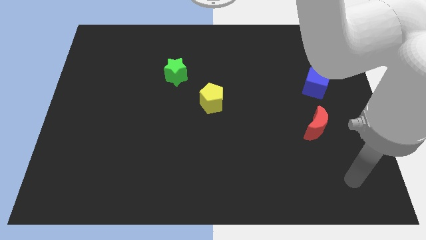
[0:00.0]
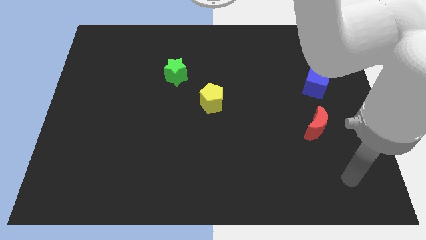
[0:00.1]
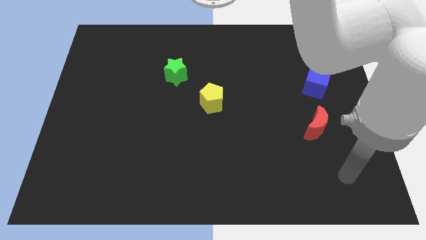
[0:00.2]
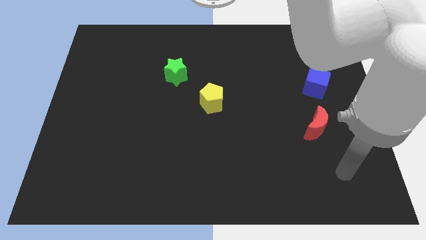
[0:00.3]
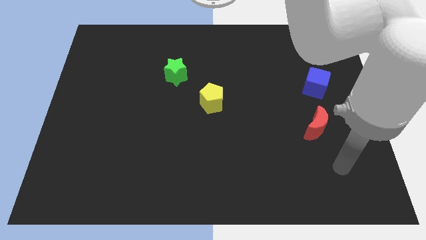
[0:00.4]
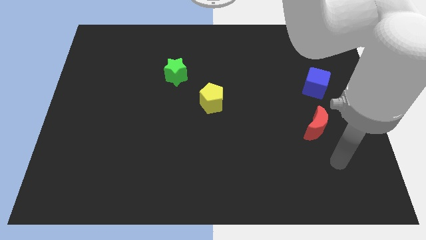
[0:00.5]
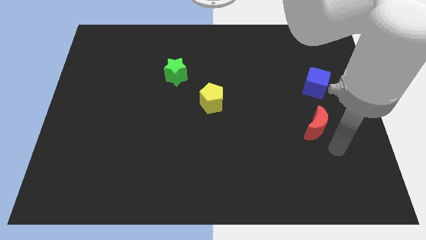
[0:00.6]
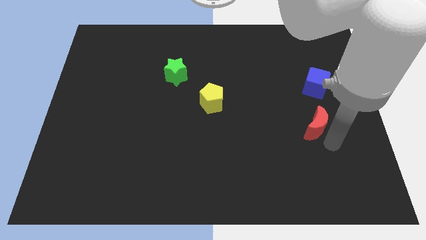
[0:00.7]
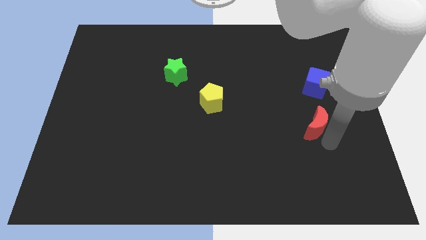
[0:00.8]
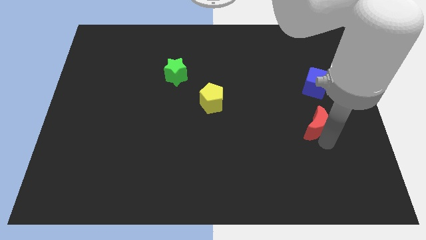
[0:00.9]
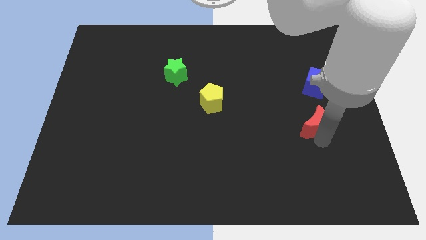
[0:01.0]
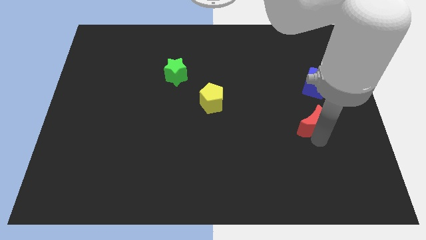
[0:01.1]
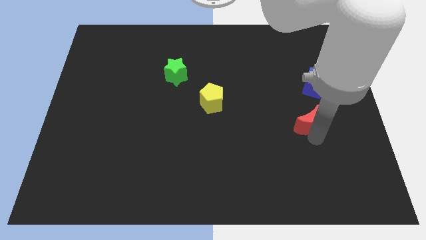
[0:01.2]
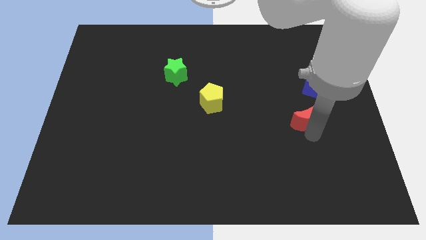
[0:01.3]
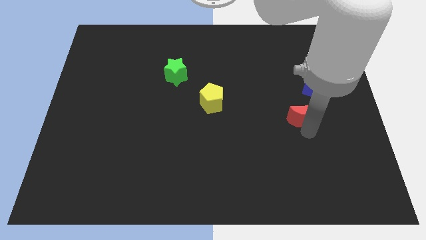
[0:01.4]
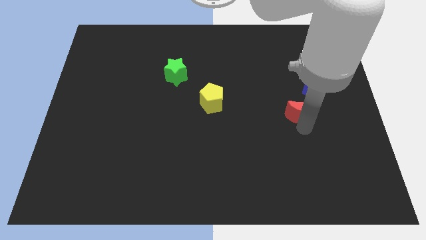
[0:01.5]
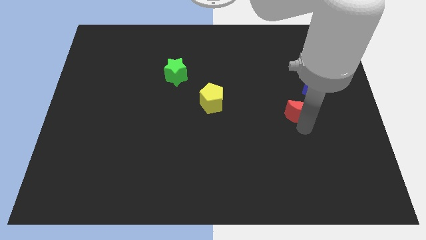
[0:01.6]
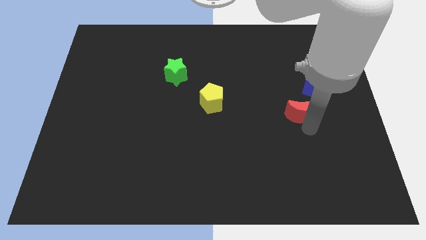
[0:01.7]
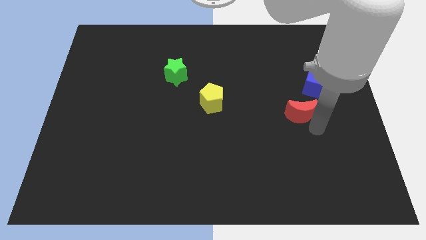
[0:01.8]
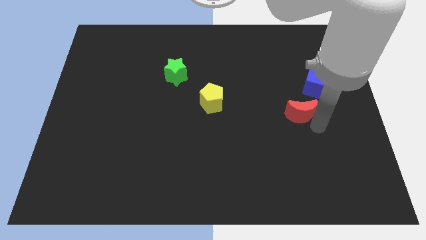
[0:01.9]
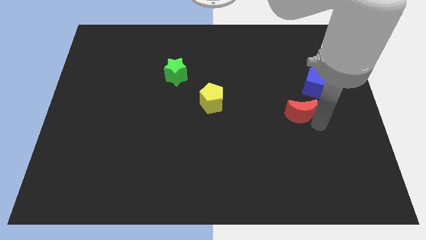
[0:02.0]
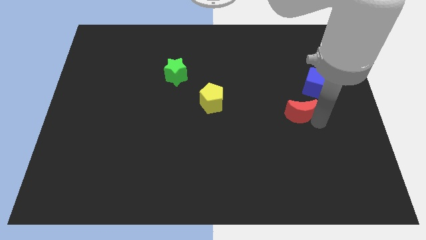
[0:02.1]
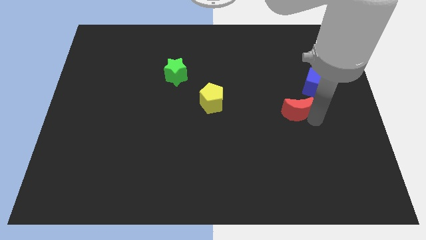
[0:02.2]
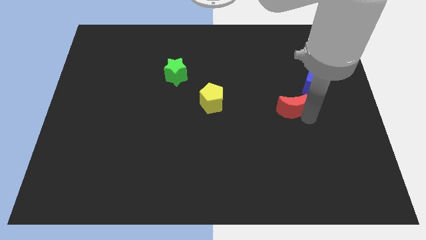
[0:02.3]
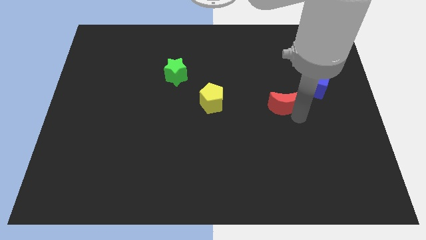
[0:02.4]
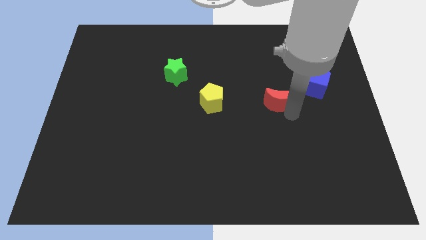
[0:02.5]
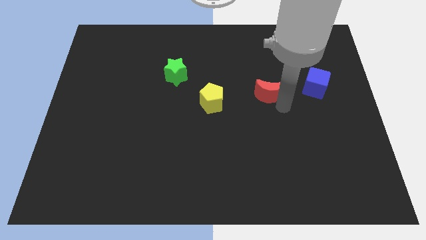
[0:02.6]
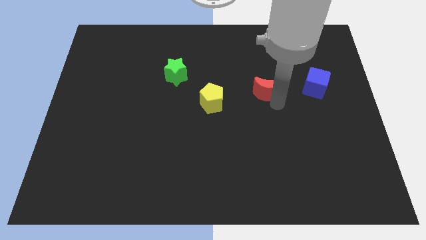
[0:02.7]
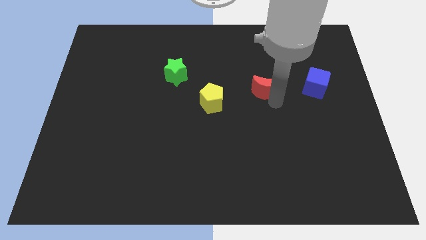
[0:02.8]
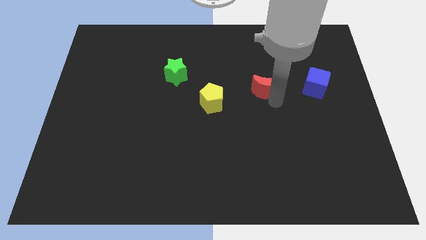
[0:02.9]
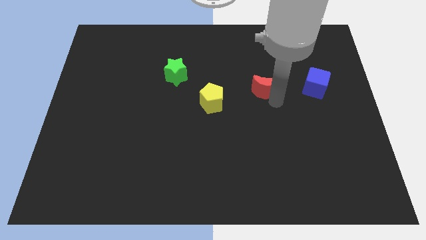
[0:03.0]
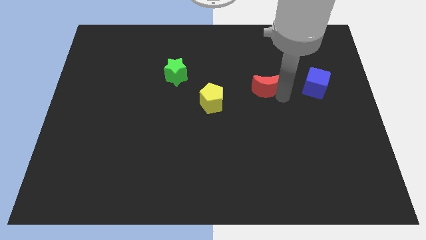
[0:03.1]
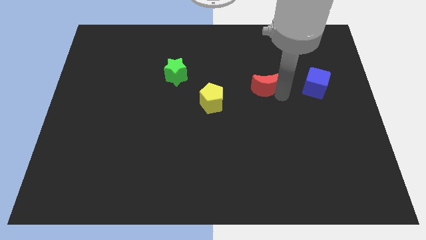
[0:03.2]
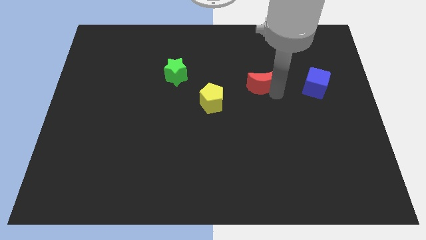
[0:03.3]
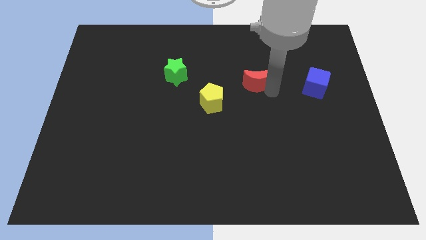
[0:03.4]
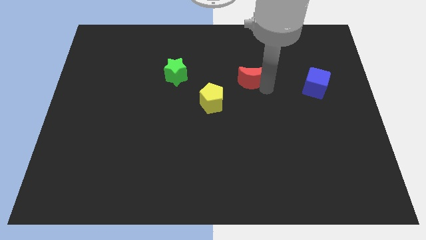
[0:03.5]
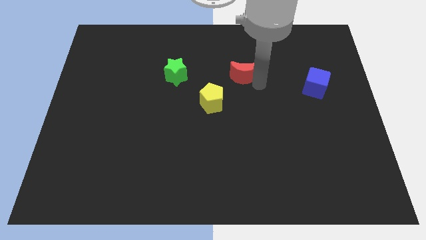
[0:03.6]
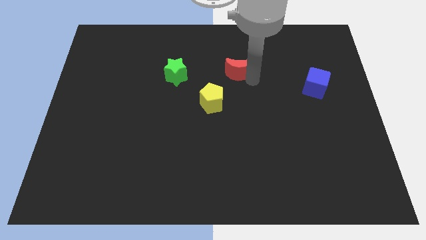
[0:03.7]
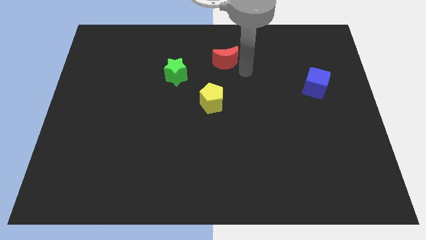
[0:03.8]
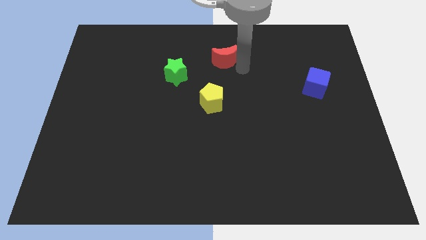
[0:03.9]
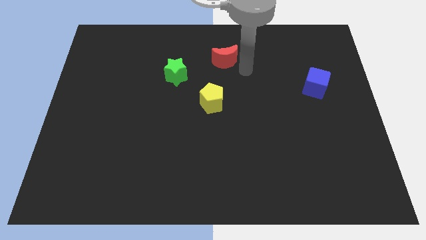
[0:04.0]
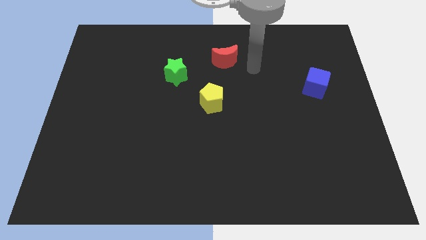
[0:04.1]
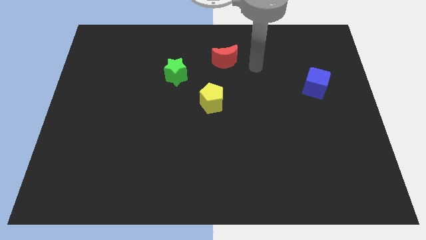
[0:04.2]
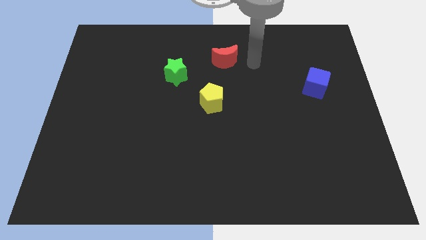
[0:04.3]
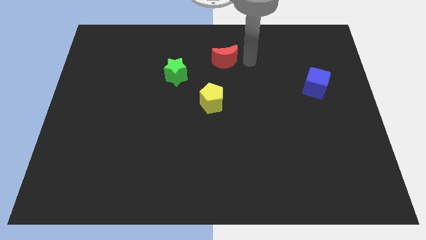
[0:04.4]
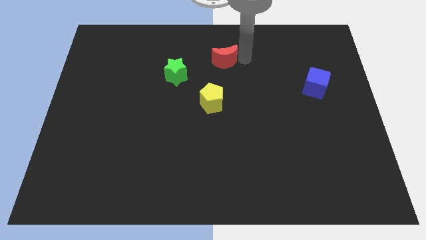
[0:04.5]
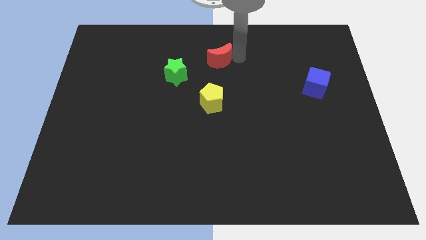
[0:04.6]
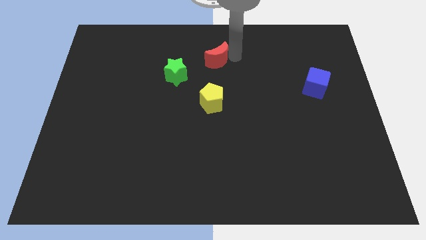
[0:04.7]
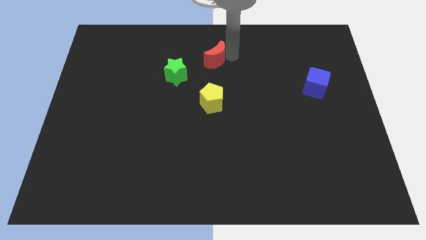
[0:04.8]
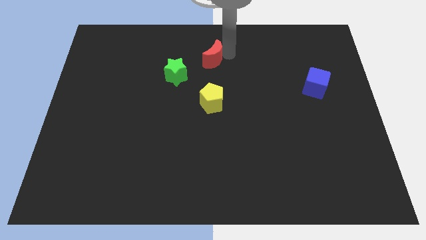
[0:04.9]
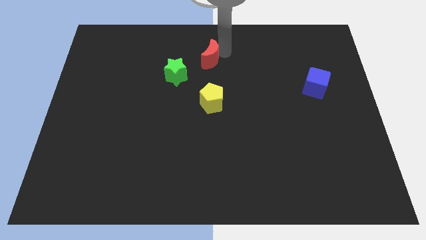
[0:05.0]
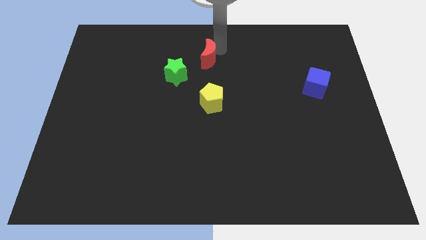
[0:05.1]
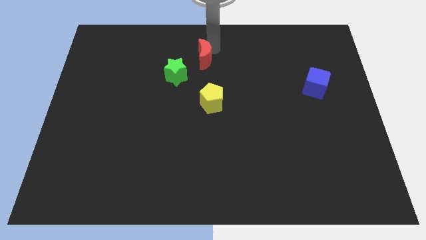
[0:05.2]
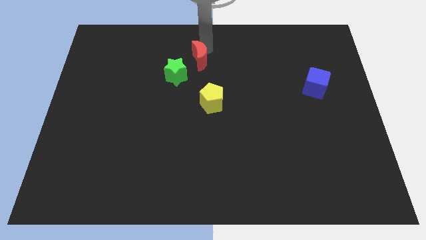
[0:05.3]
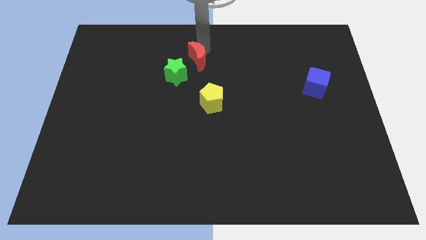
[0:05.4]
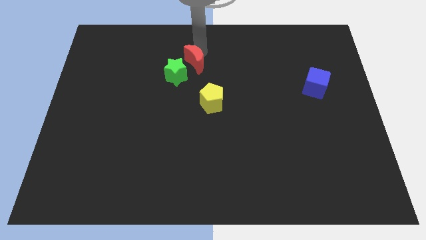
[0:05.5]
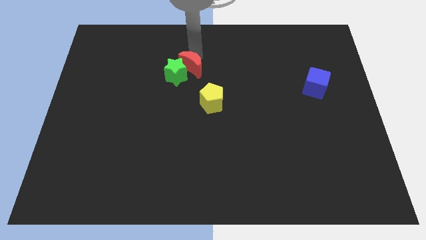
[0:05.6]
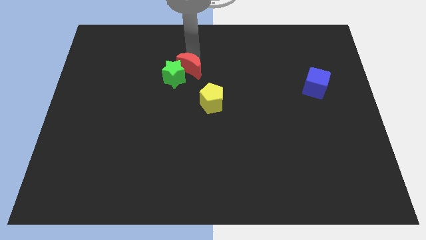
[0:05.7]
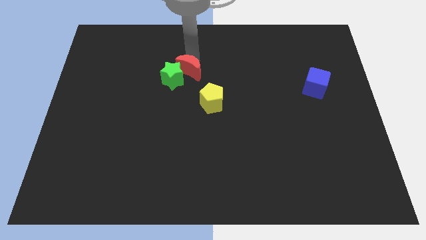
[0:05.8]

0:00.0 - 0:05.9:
move the red moon next to the green star

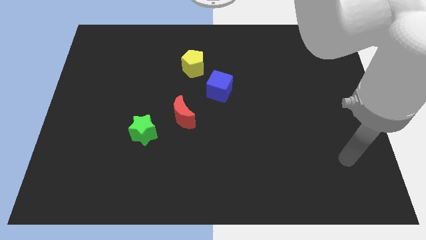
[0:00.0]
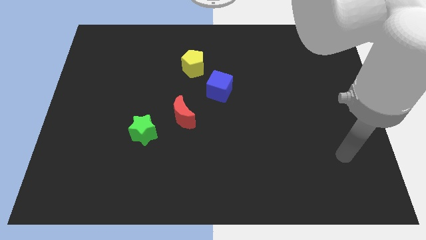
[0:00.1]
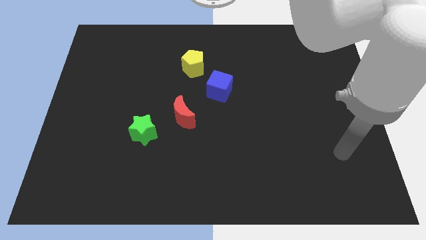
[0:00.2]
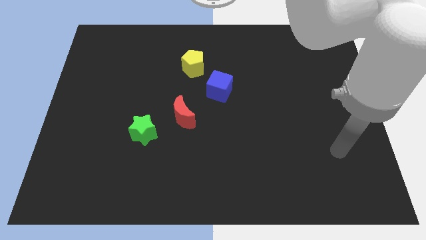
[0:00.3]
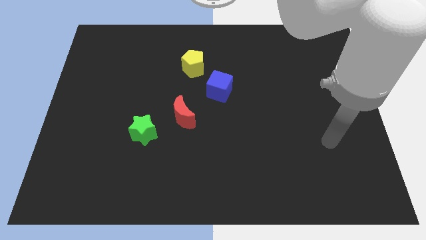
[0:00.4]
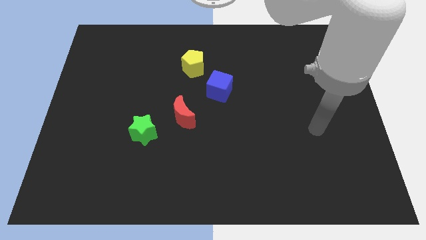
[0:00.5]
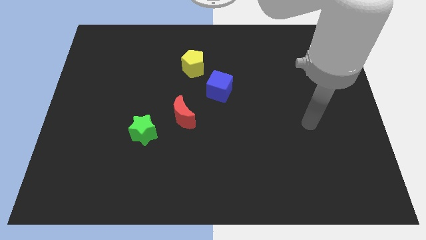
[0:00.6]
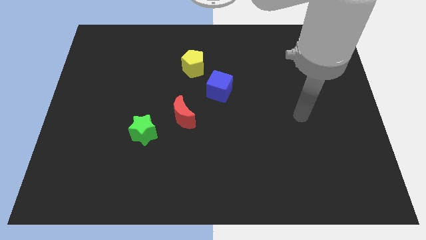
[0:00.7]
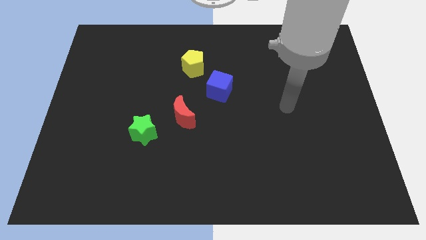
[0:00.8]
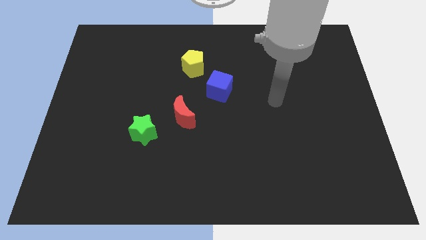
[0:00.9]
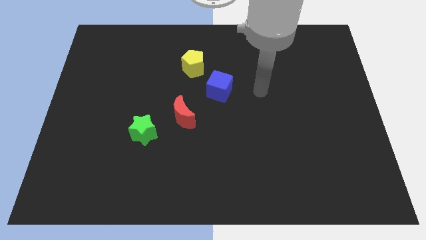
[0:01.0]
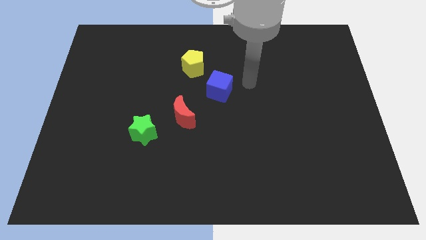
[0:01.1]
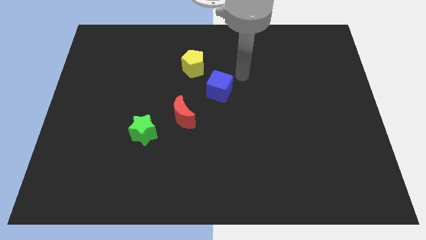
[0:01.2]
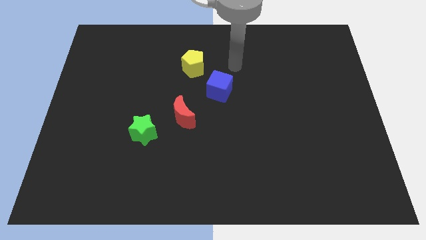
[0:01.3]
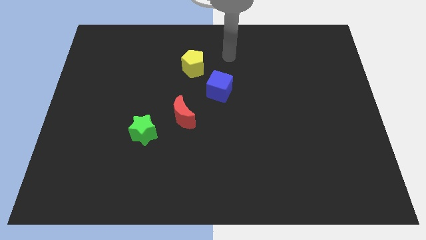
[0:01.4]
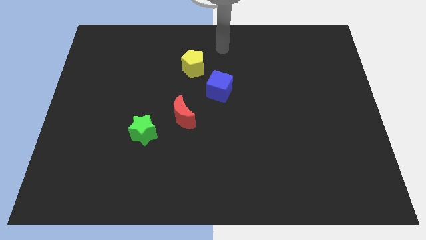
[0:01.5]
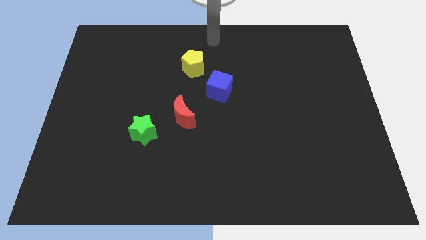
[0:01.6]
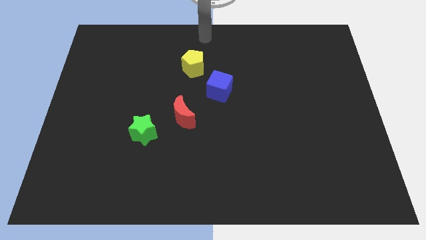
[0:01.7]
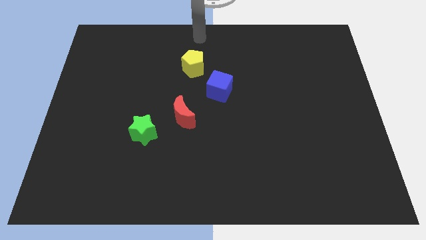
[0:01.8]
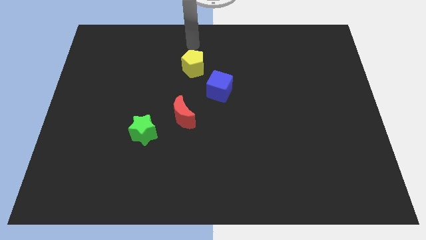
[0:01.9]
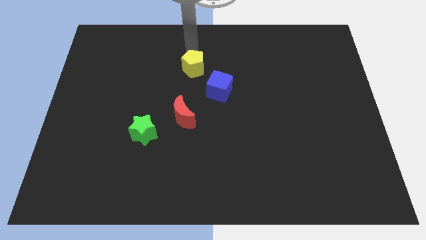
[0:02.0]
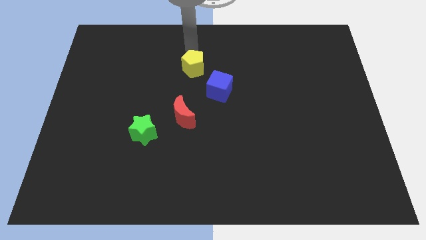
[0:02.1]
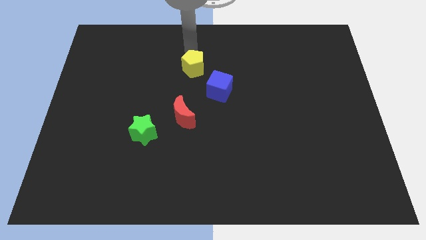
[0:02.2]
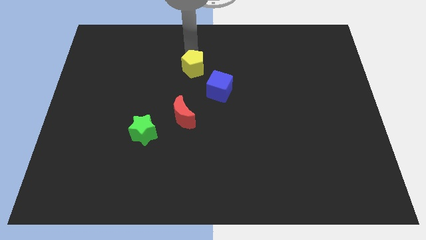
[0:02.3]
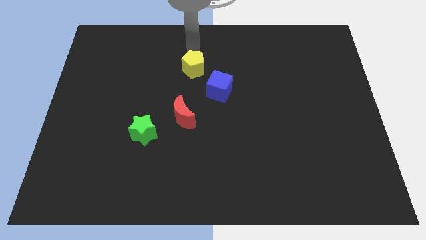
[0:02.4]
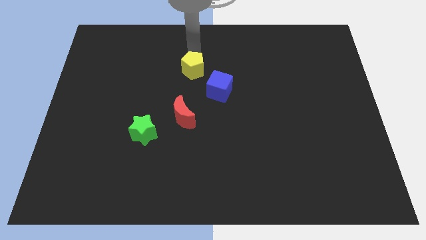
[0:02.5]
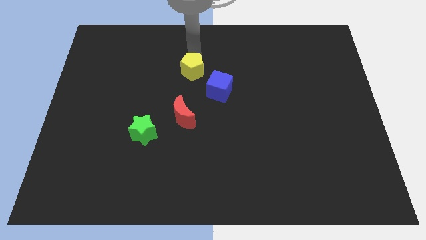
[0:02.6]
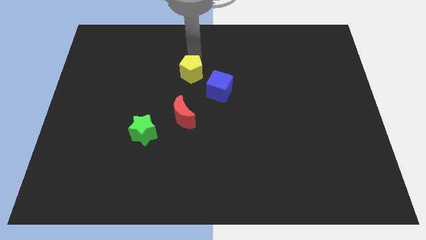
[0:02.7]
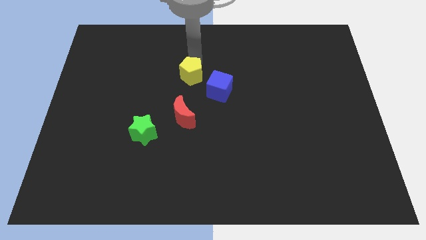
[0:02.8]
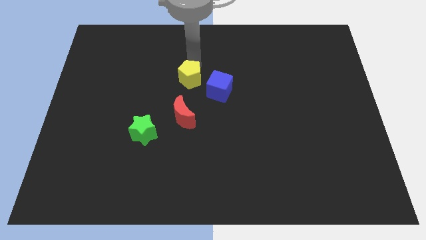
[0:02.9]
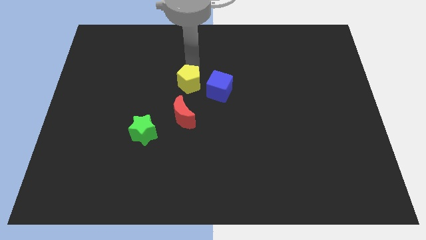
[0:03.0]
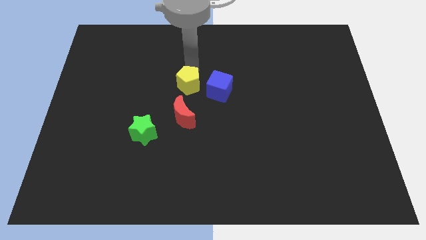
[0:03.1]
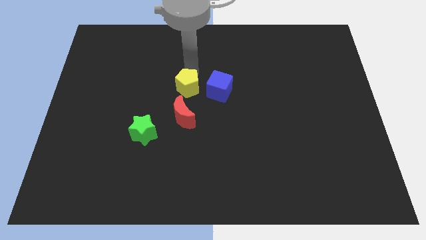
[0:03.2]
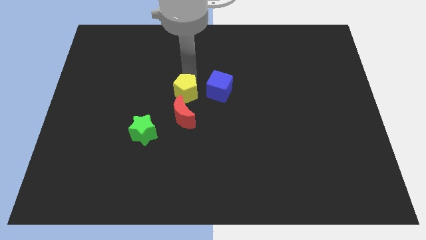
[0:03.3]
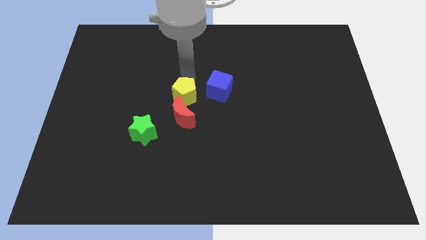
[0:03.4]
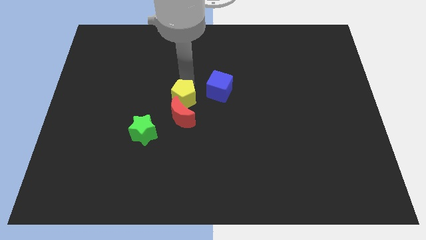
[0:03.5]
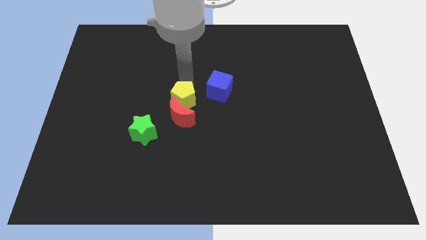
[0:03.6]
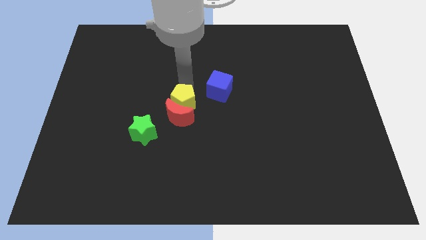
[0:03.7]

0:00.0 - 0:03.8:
put the pentagon next to the red moon
